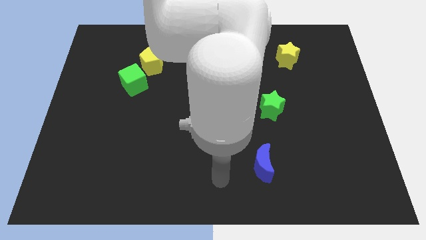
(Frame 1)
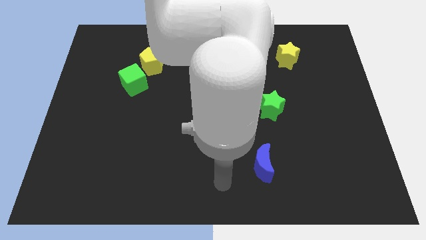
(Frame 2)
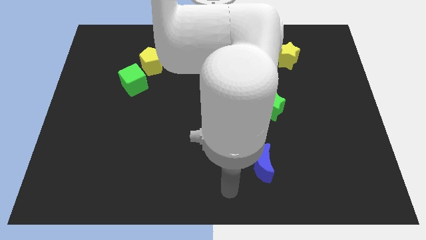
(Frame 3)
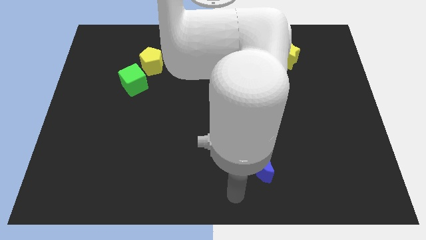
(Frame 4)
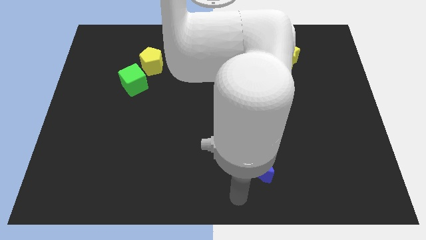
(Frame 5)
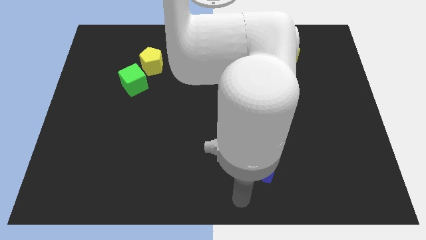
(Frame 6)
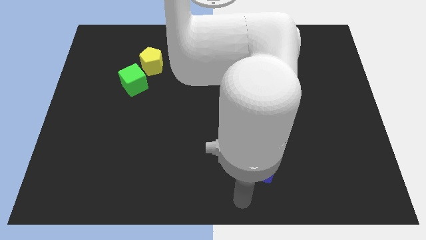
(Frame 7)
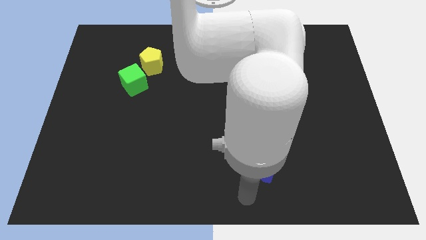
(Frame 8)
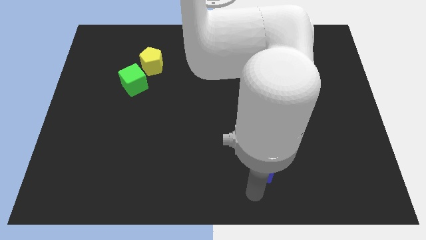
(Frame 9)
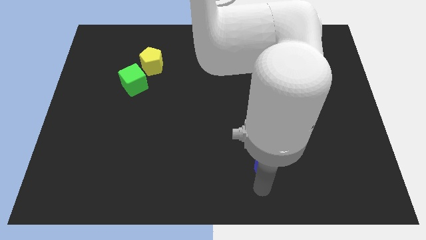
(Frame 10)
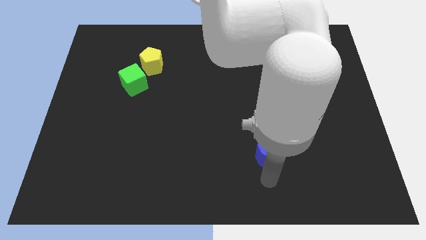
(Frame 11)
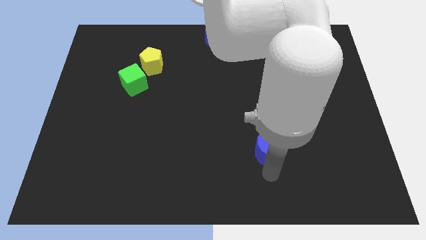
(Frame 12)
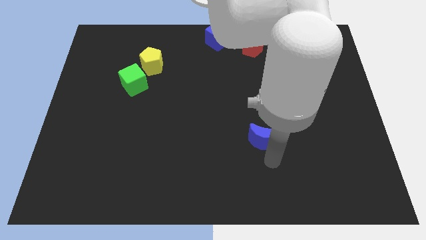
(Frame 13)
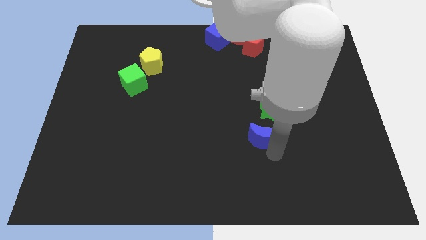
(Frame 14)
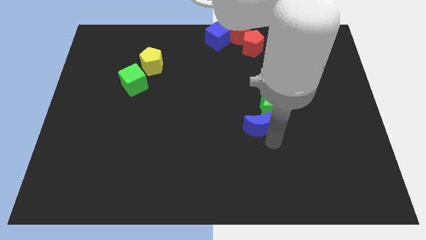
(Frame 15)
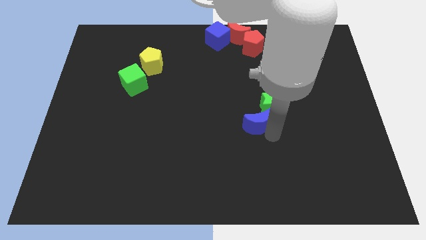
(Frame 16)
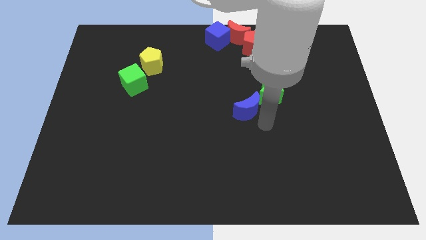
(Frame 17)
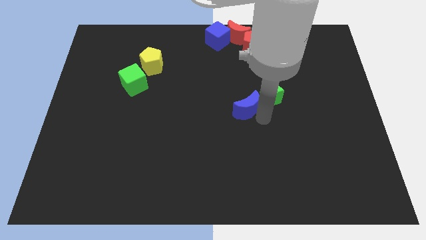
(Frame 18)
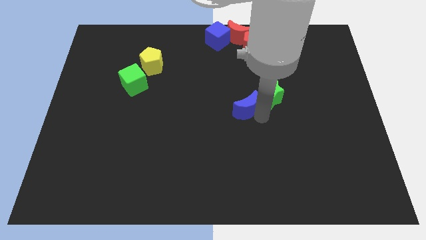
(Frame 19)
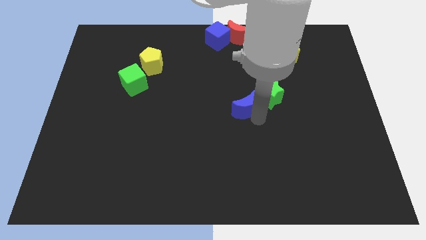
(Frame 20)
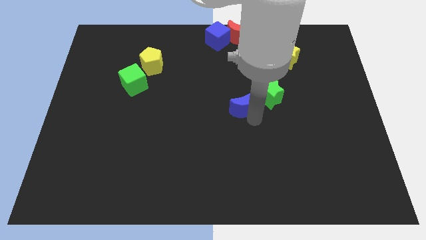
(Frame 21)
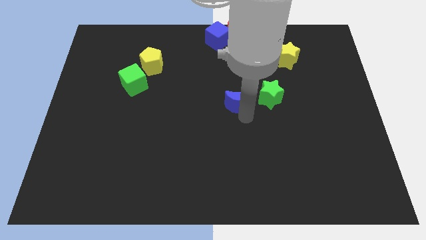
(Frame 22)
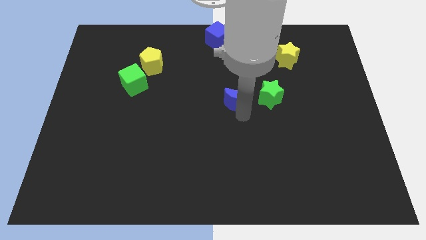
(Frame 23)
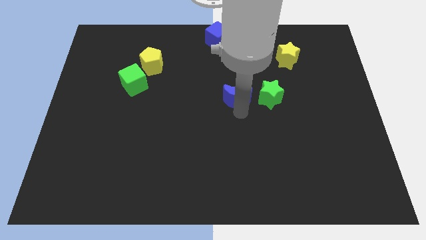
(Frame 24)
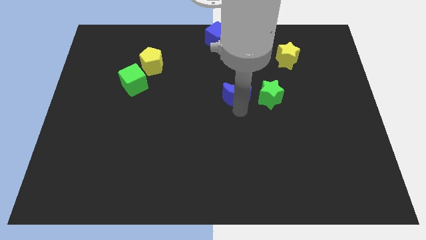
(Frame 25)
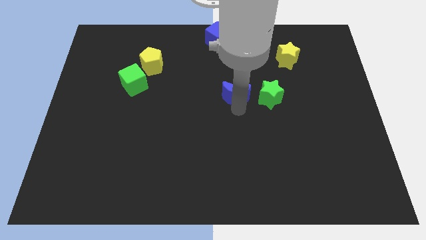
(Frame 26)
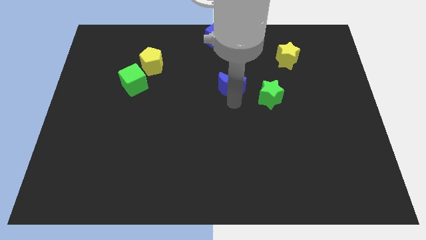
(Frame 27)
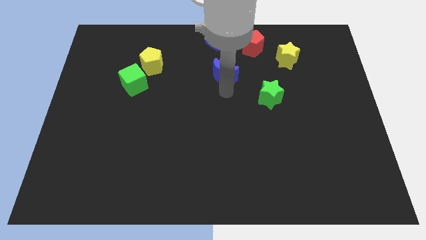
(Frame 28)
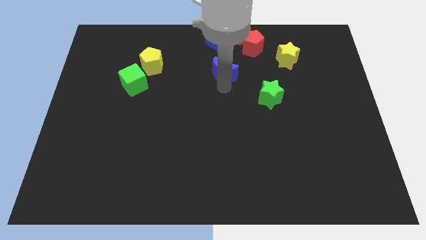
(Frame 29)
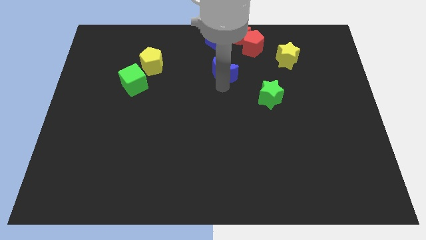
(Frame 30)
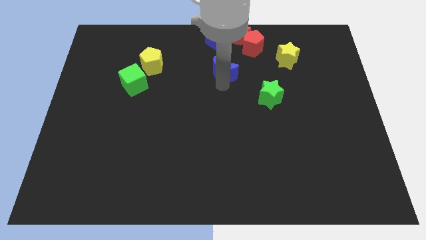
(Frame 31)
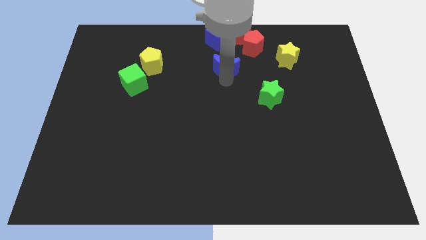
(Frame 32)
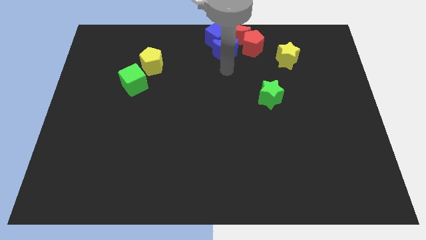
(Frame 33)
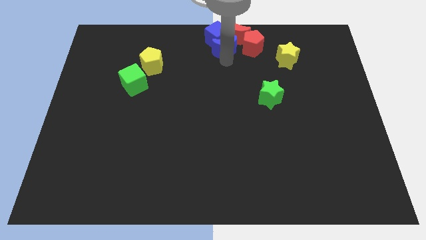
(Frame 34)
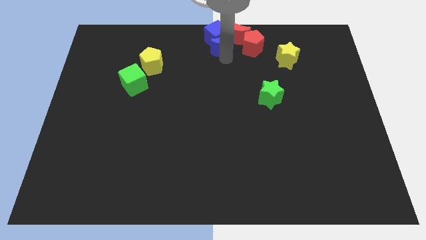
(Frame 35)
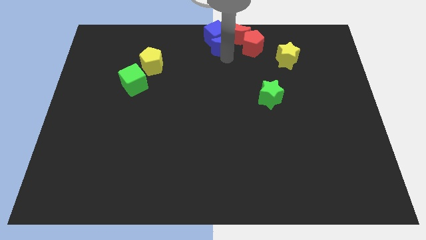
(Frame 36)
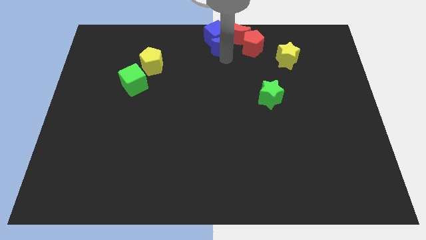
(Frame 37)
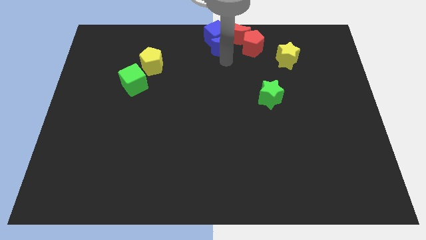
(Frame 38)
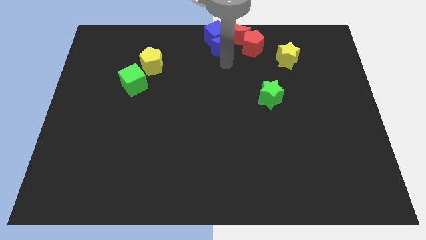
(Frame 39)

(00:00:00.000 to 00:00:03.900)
place the blue crescent to the bottom of the blue cube

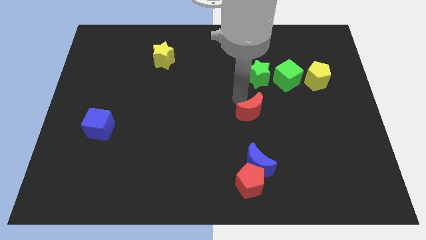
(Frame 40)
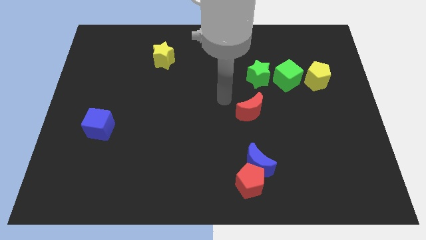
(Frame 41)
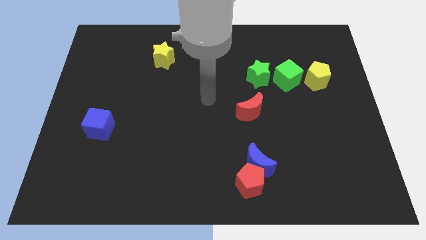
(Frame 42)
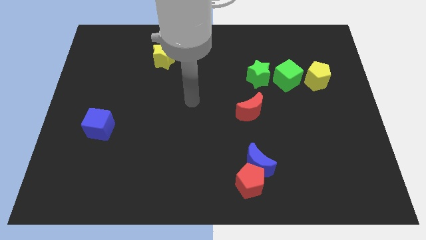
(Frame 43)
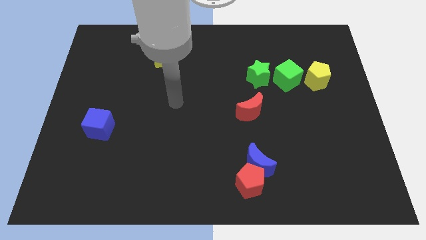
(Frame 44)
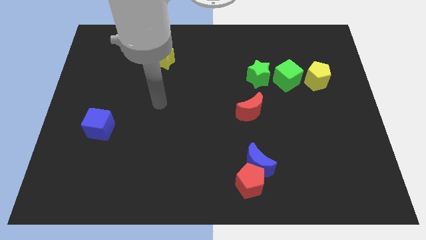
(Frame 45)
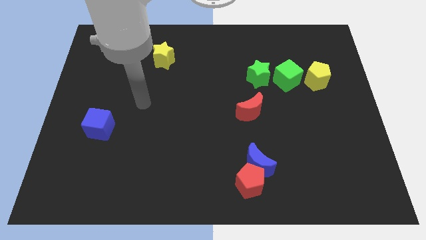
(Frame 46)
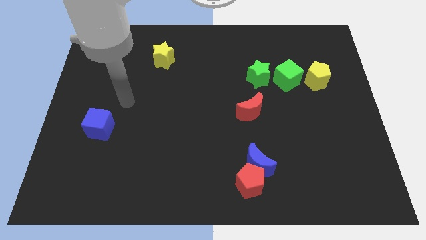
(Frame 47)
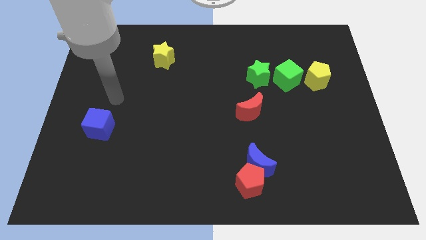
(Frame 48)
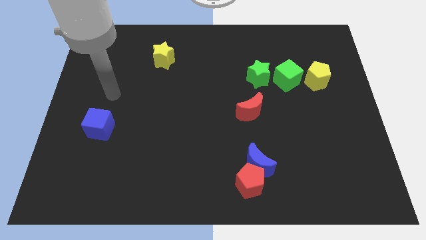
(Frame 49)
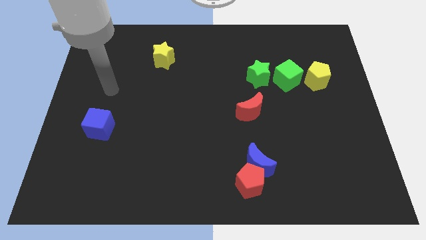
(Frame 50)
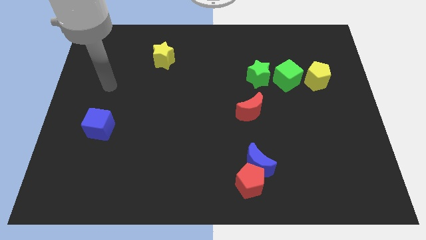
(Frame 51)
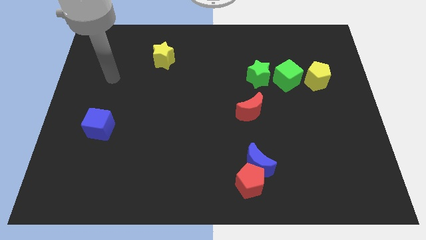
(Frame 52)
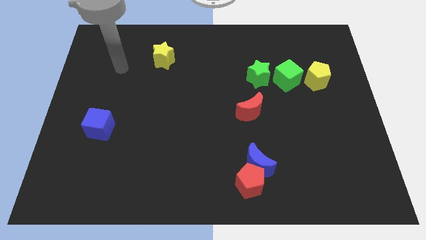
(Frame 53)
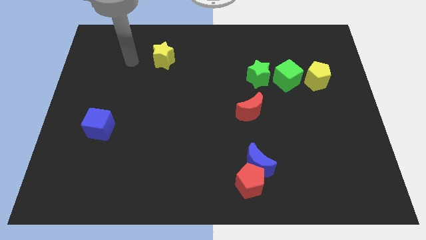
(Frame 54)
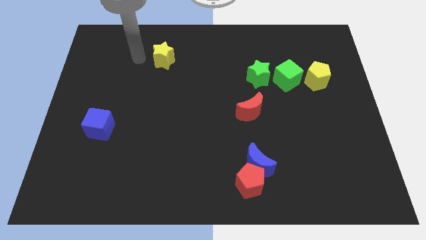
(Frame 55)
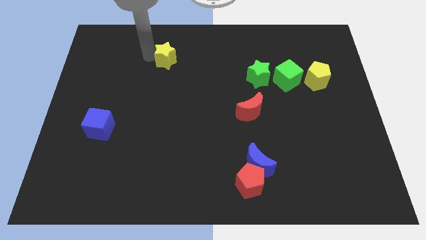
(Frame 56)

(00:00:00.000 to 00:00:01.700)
move the arm towards yellow star

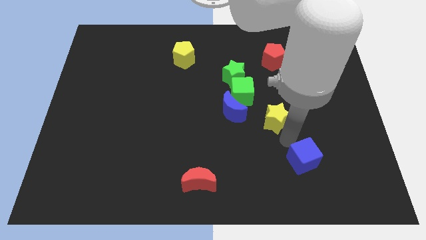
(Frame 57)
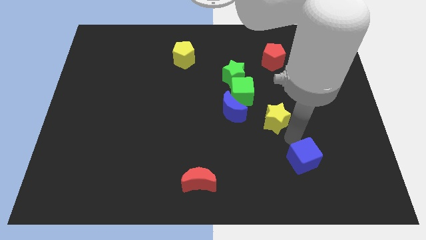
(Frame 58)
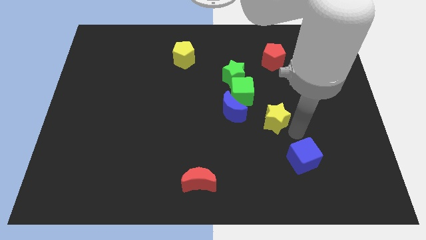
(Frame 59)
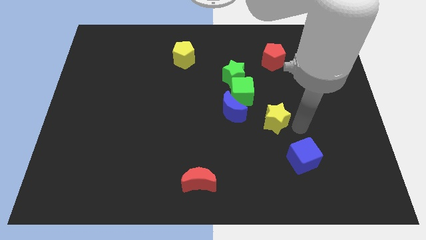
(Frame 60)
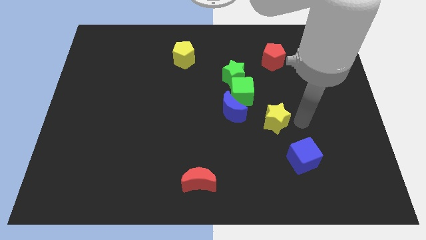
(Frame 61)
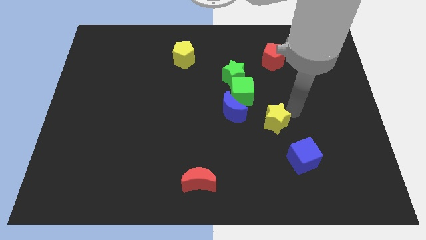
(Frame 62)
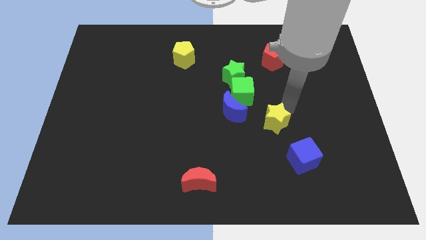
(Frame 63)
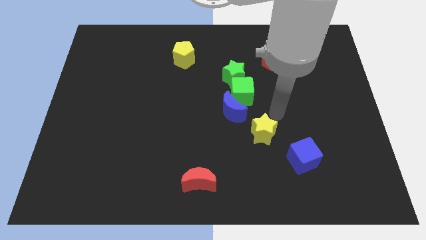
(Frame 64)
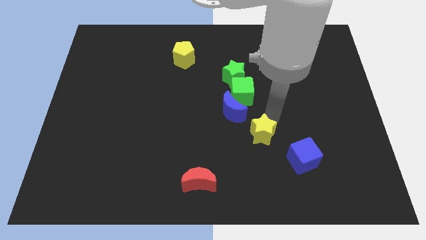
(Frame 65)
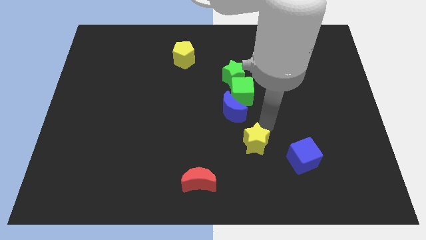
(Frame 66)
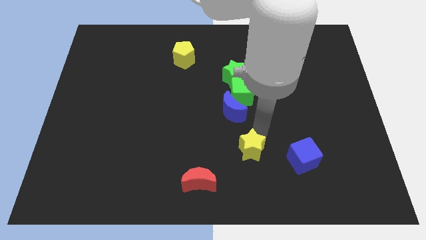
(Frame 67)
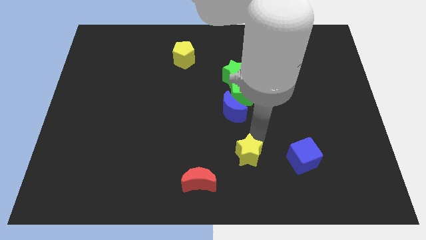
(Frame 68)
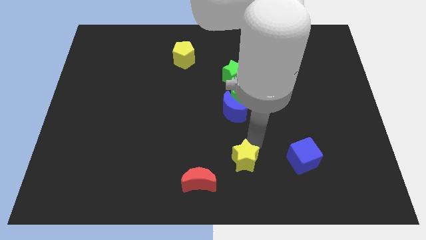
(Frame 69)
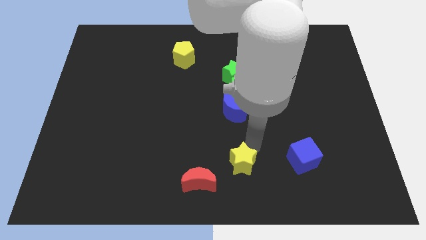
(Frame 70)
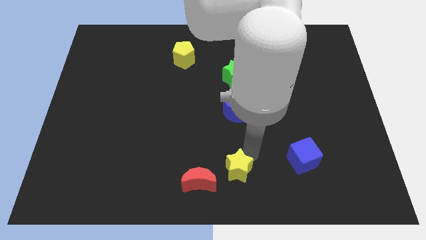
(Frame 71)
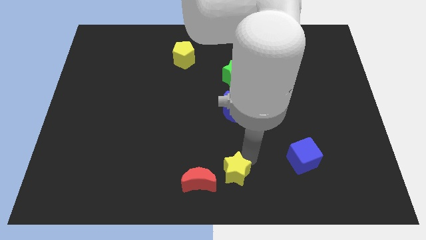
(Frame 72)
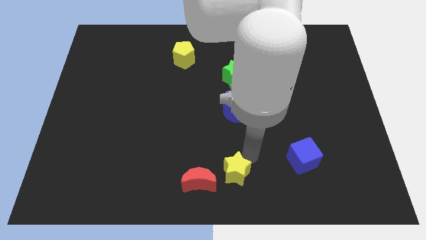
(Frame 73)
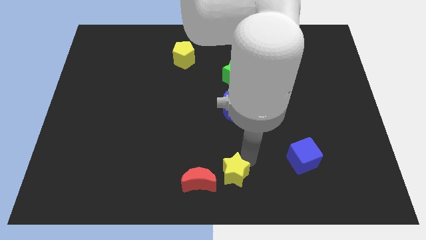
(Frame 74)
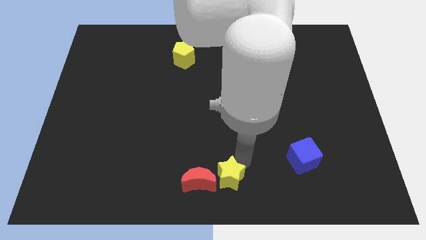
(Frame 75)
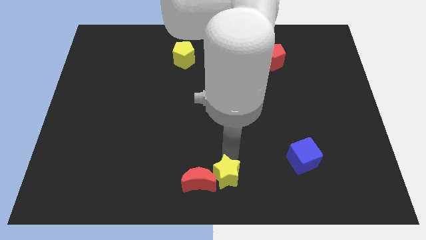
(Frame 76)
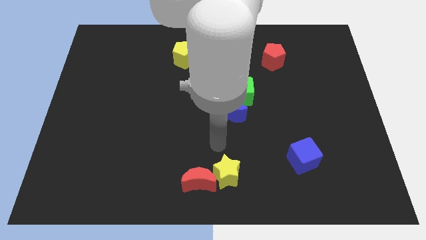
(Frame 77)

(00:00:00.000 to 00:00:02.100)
move the yellow star to the right of the red crescent

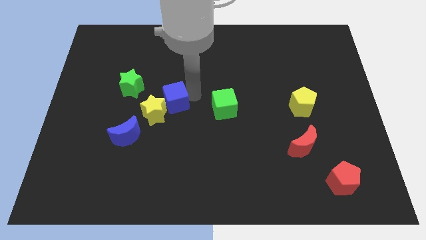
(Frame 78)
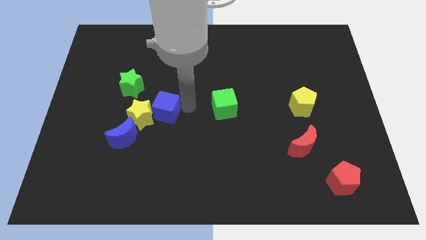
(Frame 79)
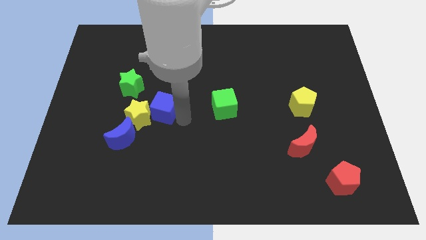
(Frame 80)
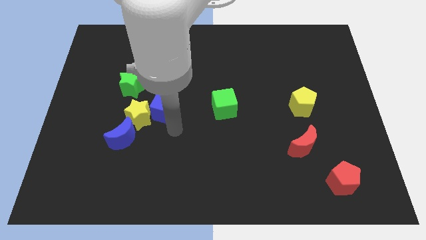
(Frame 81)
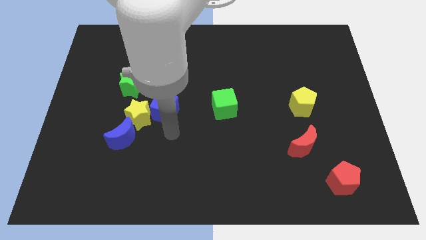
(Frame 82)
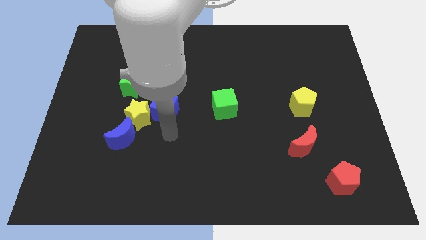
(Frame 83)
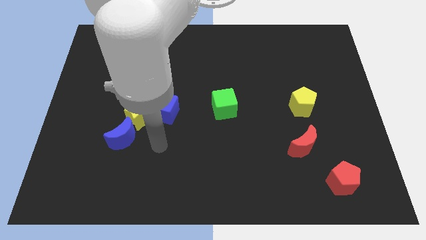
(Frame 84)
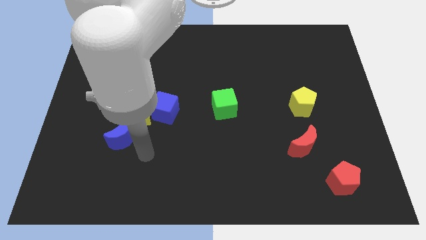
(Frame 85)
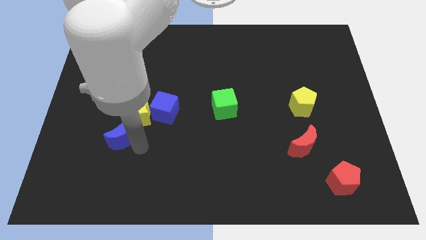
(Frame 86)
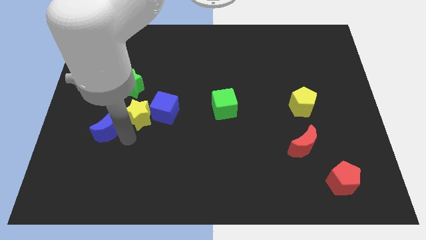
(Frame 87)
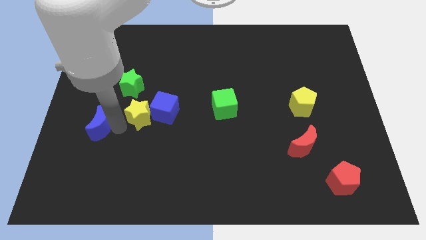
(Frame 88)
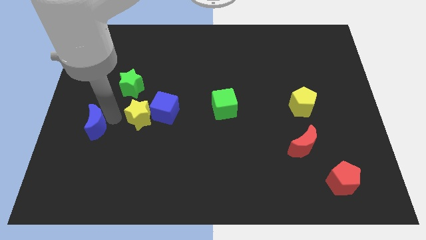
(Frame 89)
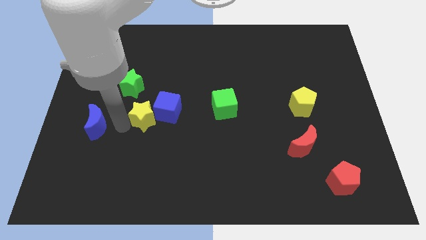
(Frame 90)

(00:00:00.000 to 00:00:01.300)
separate the blue crescent from the yellow star
